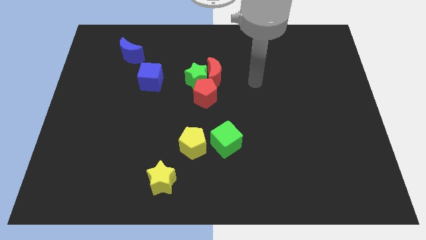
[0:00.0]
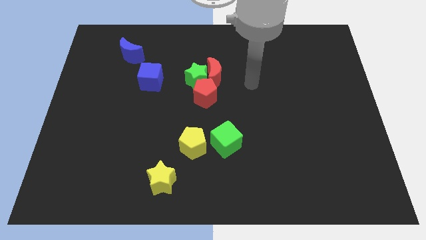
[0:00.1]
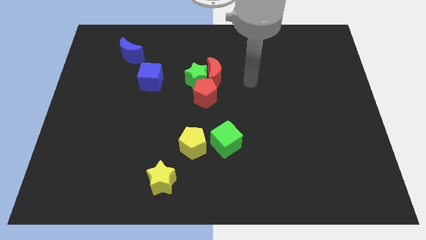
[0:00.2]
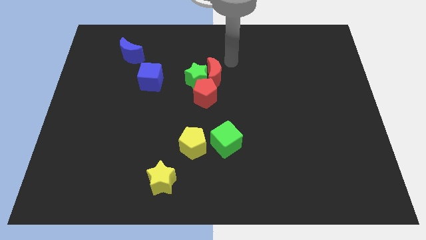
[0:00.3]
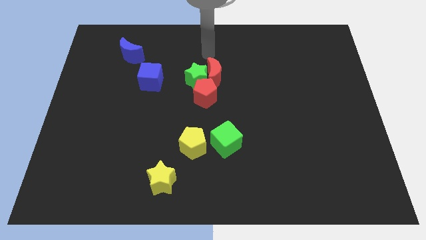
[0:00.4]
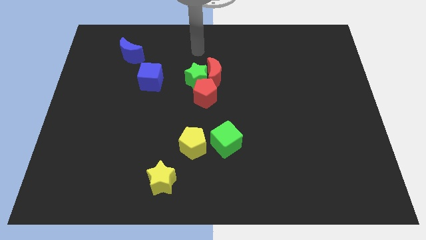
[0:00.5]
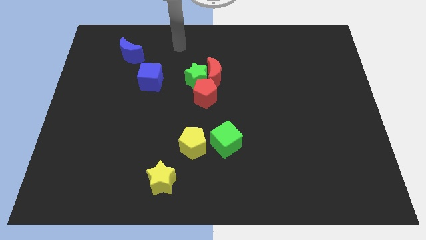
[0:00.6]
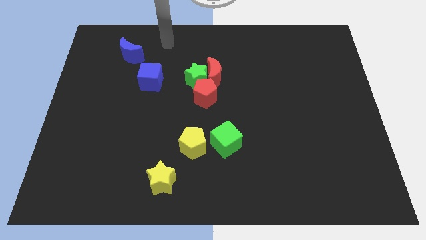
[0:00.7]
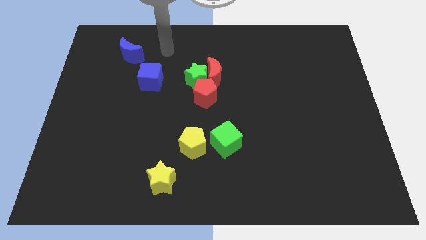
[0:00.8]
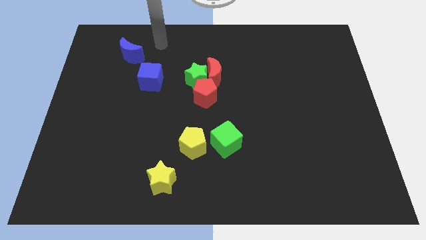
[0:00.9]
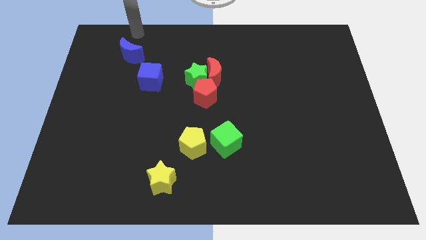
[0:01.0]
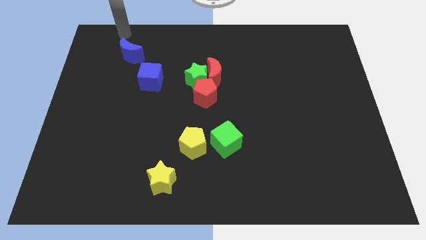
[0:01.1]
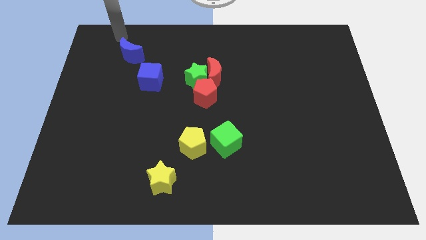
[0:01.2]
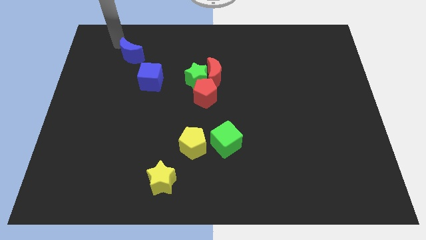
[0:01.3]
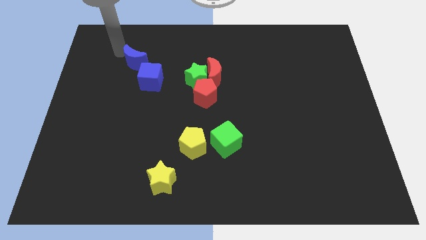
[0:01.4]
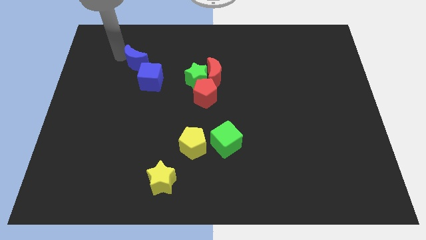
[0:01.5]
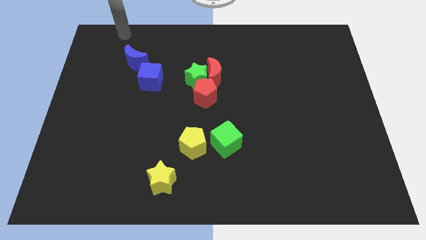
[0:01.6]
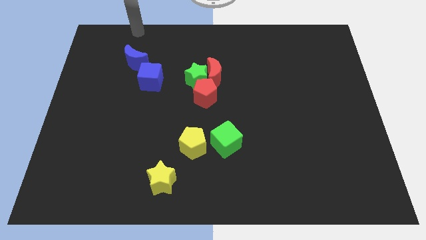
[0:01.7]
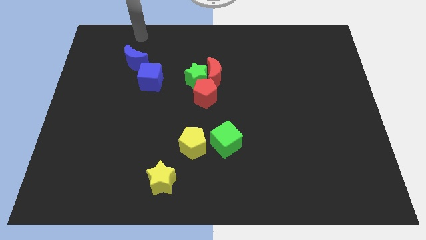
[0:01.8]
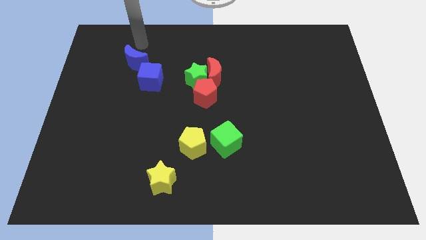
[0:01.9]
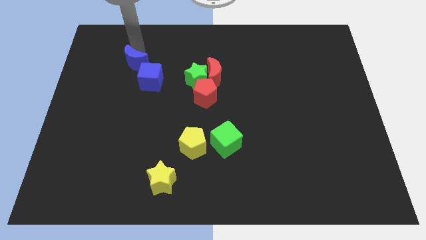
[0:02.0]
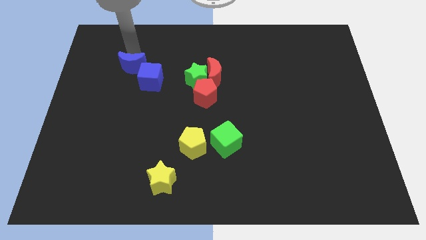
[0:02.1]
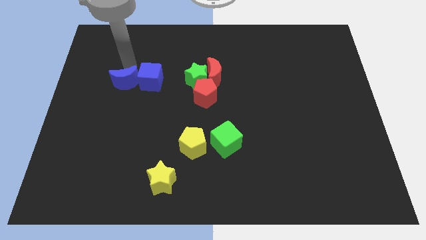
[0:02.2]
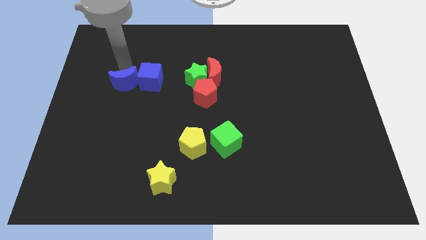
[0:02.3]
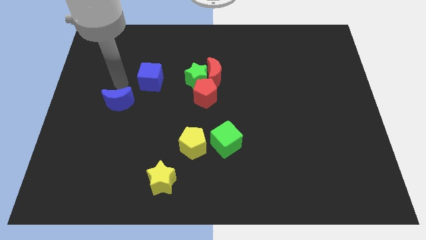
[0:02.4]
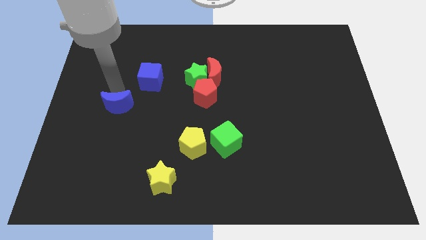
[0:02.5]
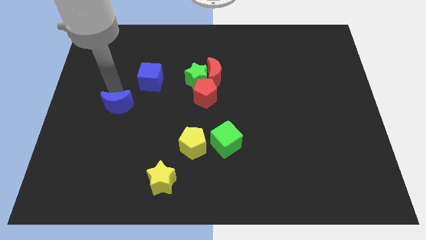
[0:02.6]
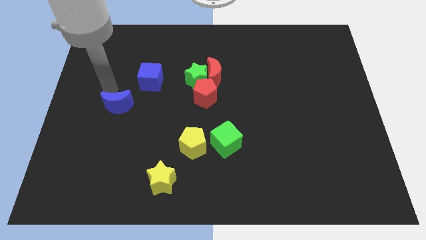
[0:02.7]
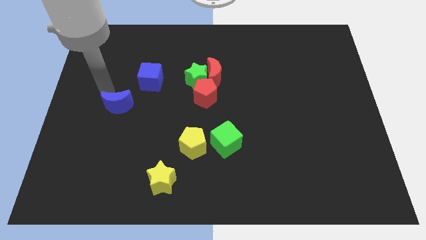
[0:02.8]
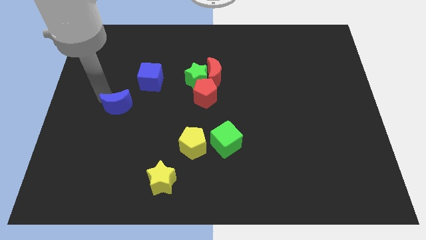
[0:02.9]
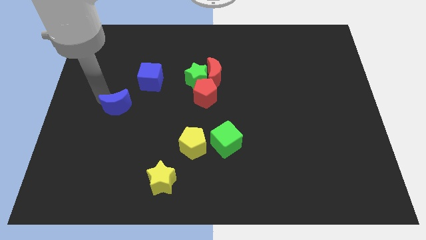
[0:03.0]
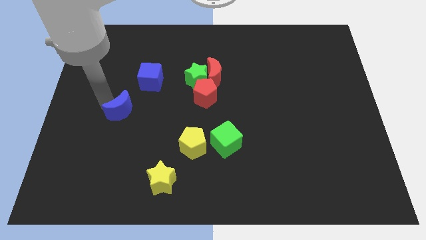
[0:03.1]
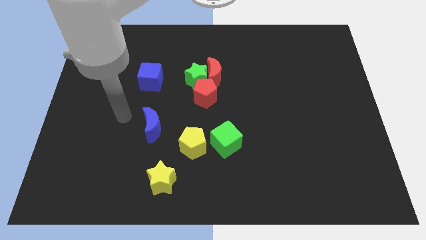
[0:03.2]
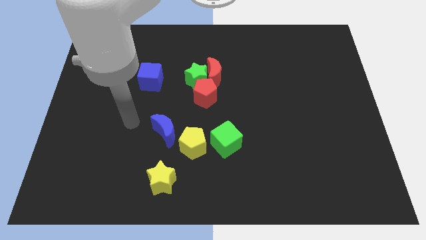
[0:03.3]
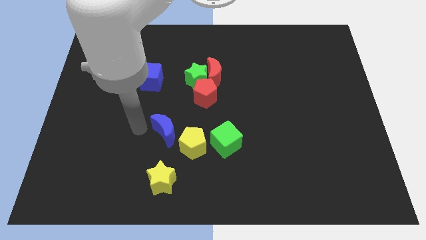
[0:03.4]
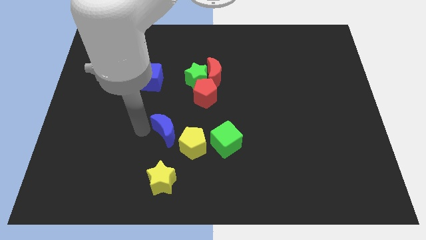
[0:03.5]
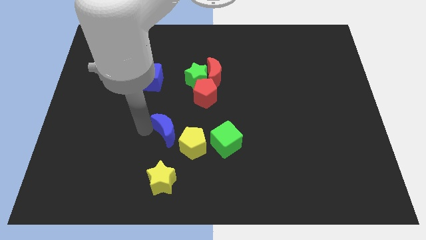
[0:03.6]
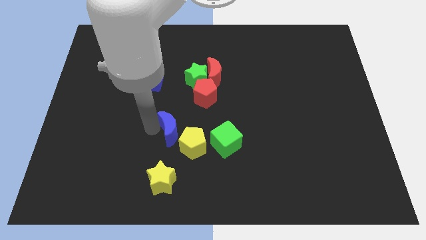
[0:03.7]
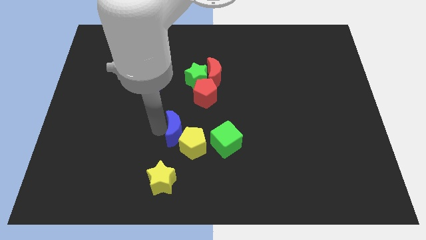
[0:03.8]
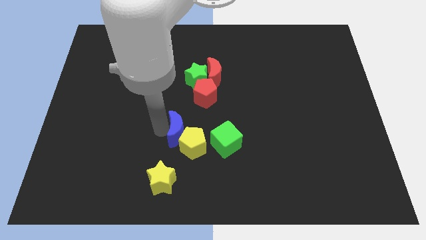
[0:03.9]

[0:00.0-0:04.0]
push the blue moon to the yellow pentagon

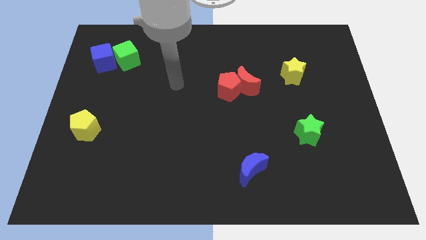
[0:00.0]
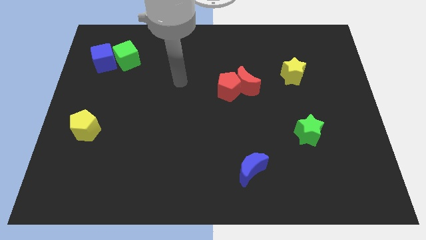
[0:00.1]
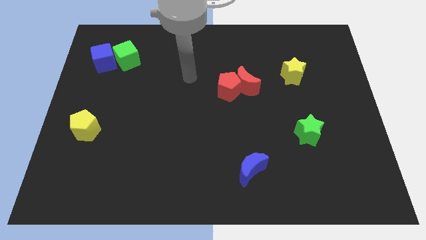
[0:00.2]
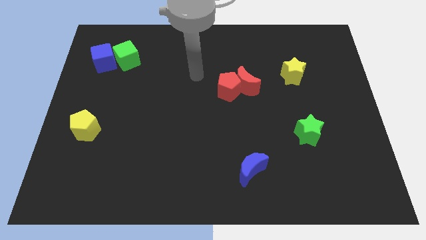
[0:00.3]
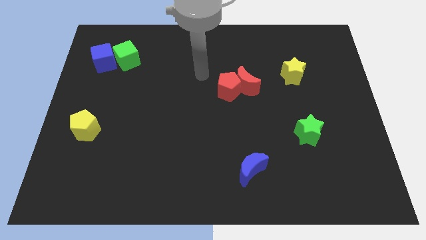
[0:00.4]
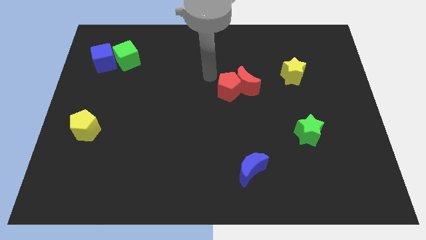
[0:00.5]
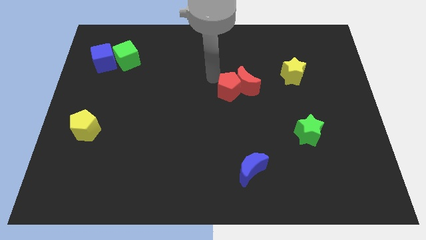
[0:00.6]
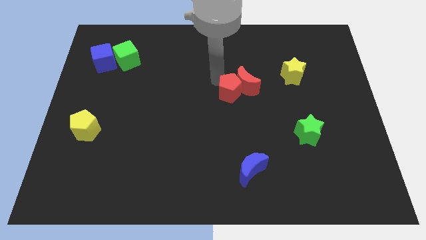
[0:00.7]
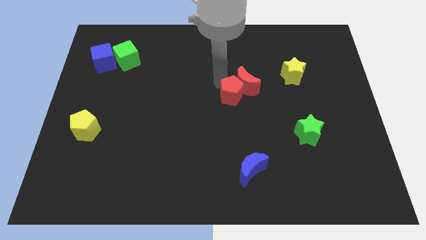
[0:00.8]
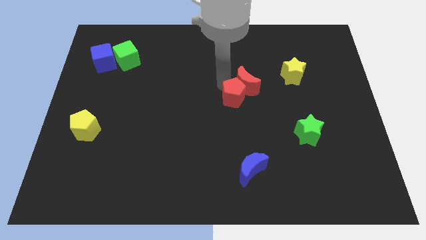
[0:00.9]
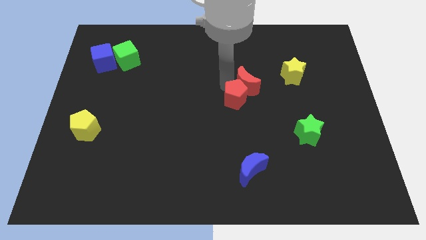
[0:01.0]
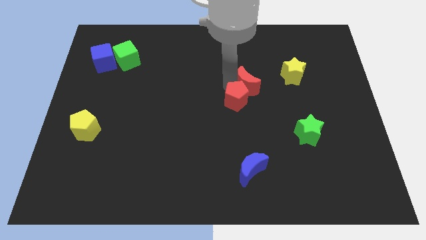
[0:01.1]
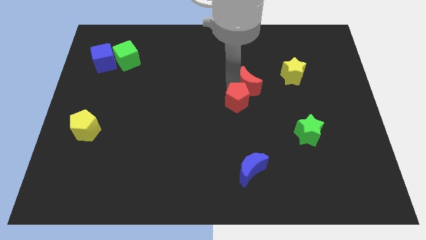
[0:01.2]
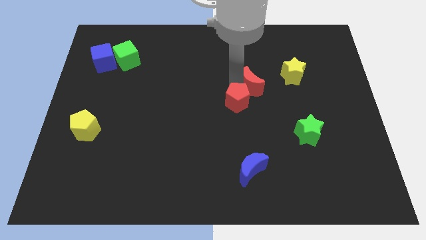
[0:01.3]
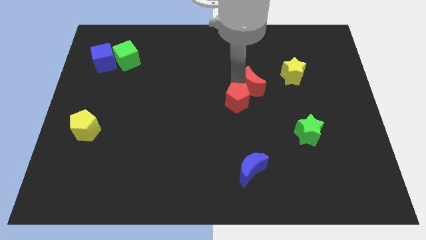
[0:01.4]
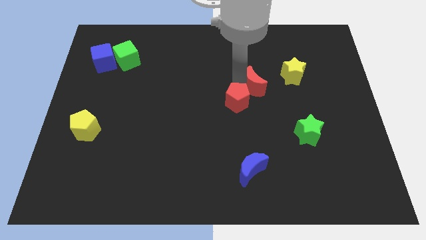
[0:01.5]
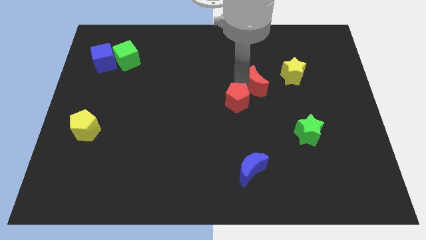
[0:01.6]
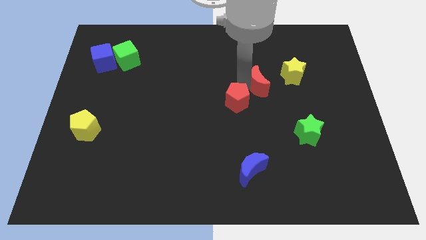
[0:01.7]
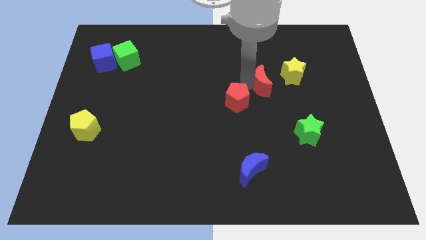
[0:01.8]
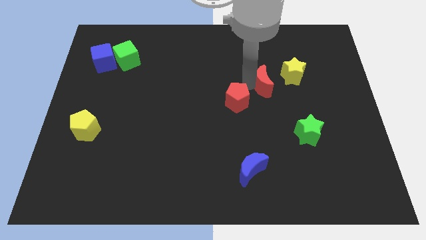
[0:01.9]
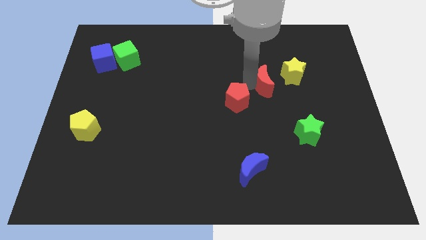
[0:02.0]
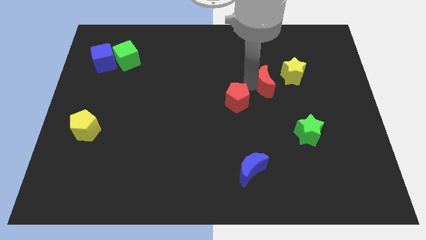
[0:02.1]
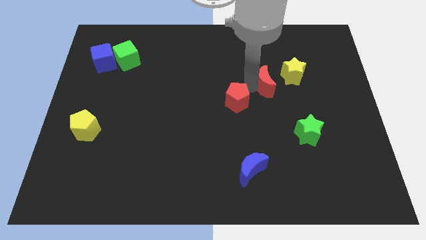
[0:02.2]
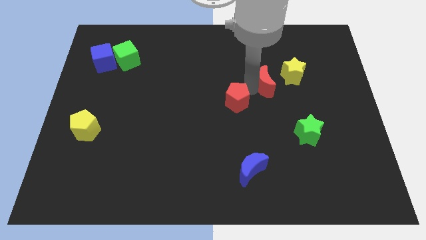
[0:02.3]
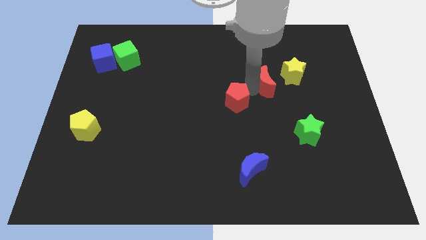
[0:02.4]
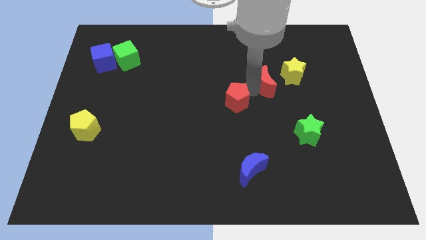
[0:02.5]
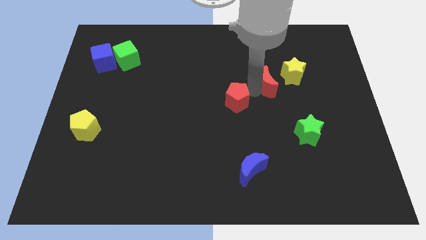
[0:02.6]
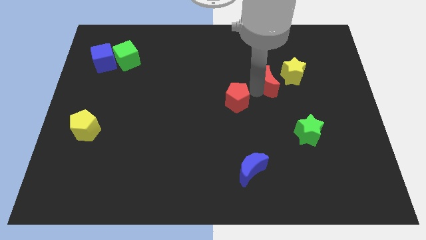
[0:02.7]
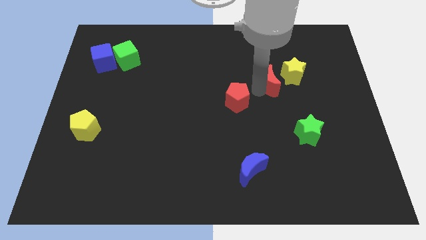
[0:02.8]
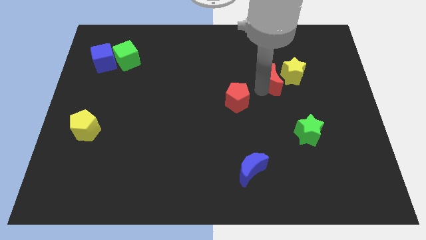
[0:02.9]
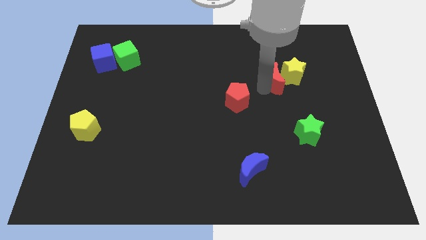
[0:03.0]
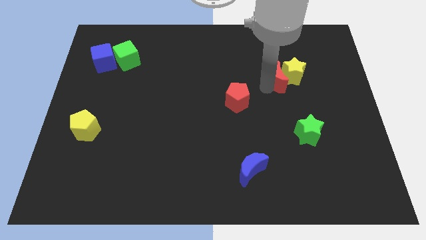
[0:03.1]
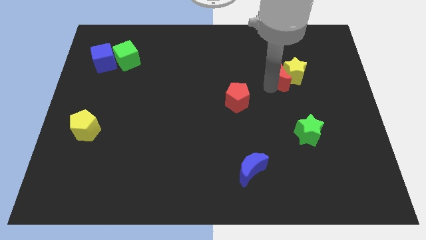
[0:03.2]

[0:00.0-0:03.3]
move the red moon towards the yellow star

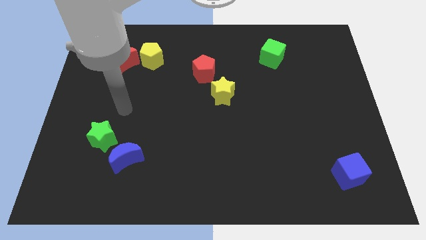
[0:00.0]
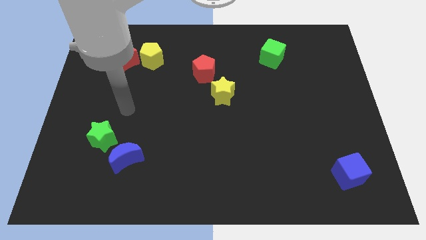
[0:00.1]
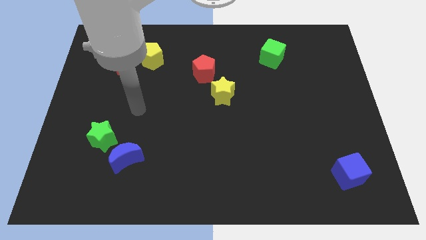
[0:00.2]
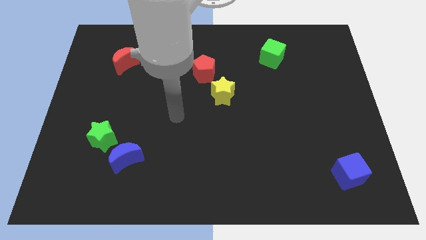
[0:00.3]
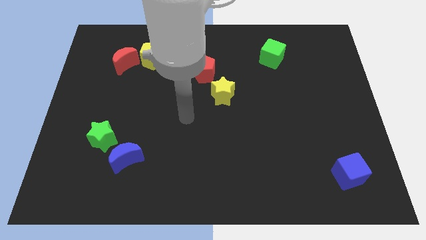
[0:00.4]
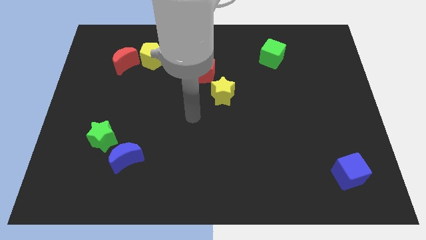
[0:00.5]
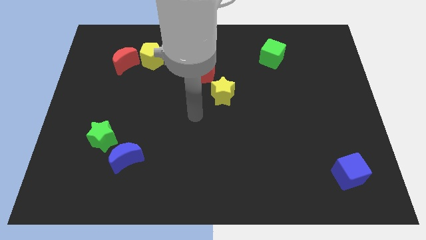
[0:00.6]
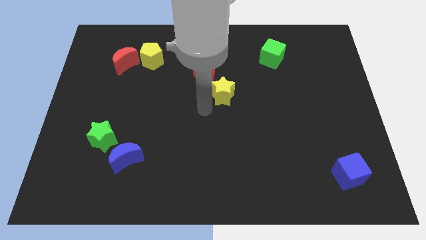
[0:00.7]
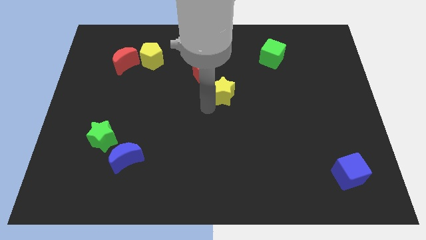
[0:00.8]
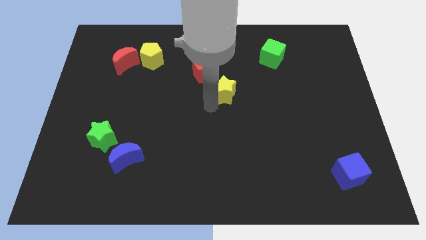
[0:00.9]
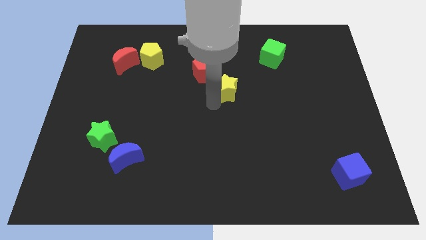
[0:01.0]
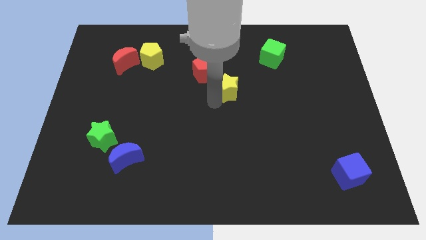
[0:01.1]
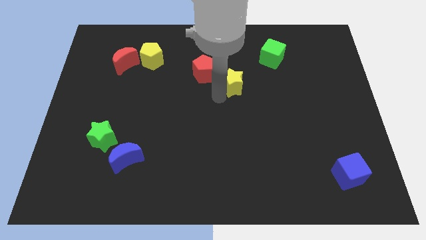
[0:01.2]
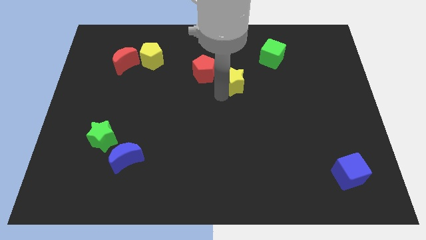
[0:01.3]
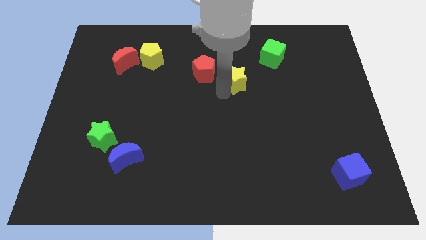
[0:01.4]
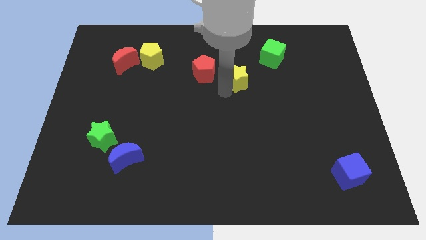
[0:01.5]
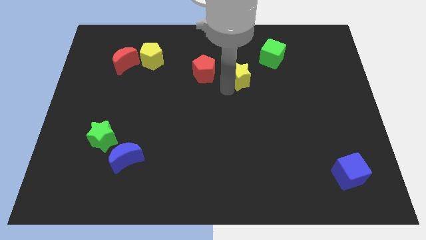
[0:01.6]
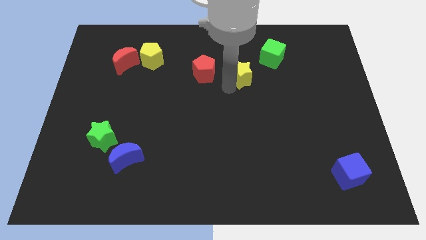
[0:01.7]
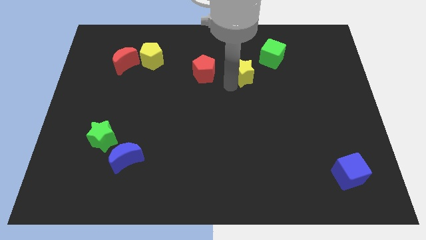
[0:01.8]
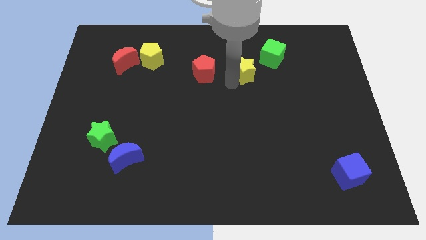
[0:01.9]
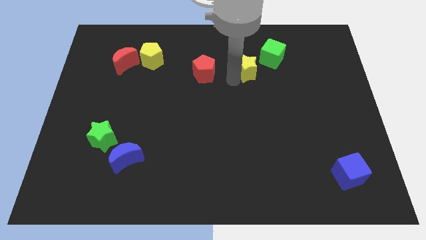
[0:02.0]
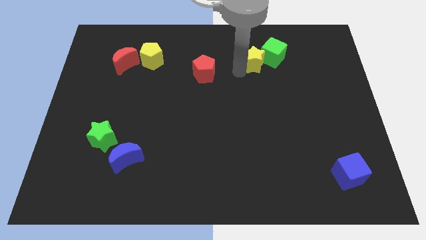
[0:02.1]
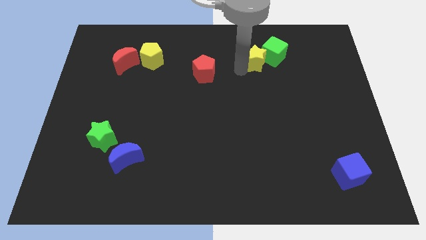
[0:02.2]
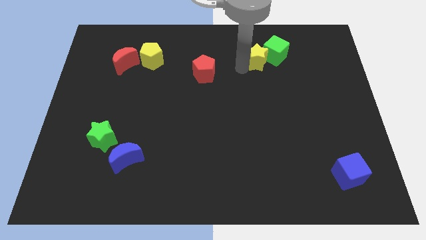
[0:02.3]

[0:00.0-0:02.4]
put the yellow star next to the green cube
